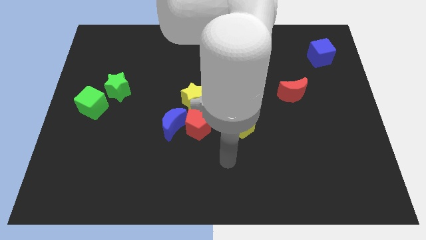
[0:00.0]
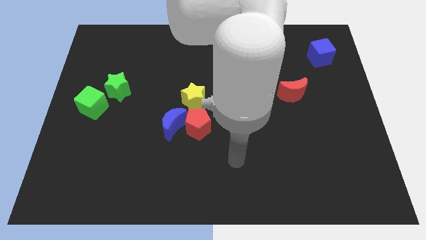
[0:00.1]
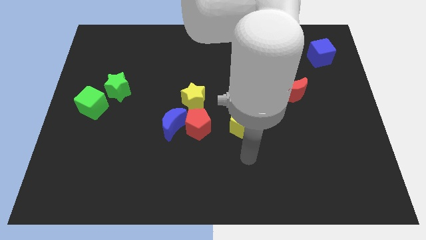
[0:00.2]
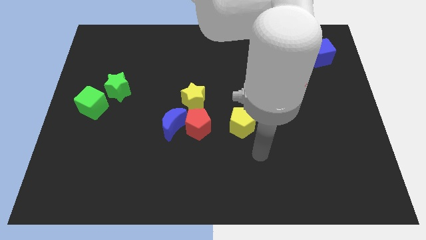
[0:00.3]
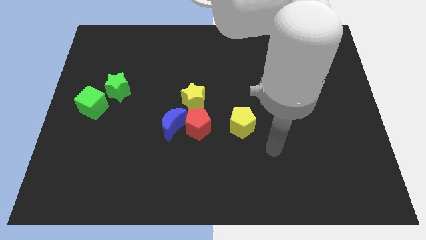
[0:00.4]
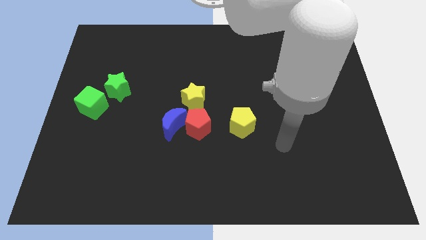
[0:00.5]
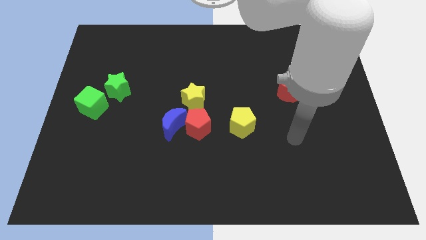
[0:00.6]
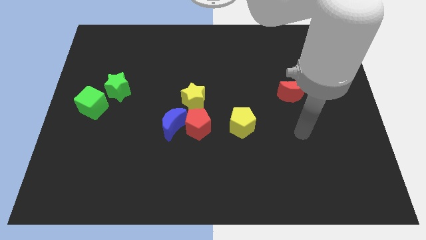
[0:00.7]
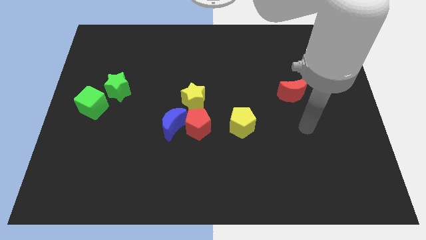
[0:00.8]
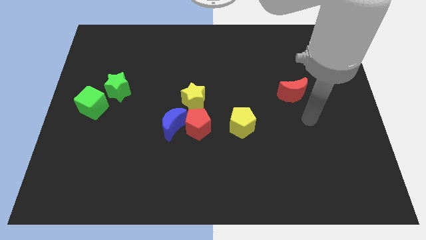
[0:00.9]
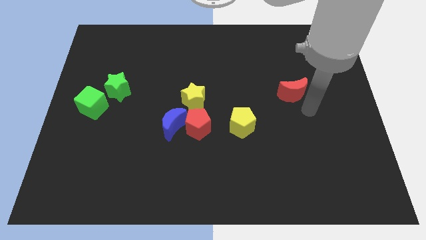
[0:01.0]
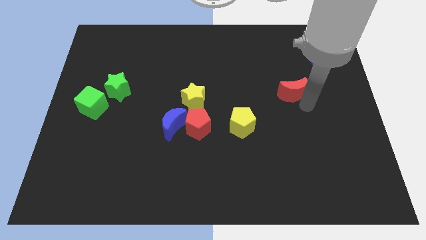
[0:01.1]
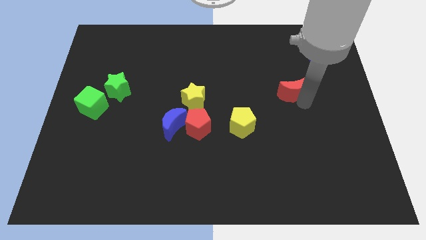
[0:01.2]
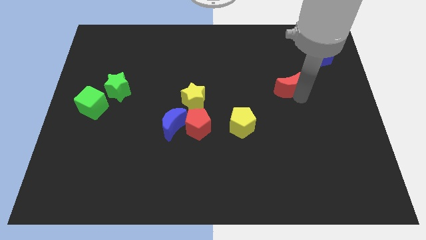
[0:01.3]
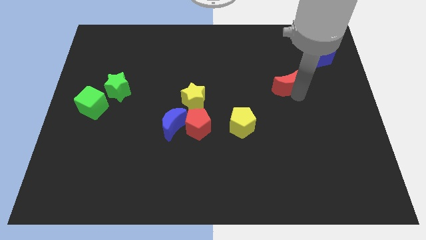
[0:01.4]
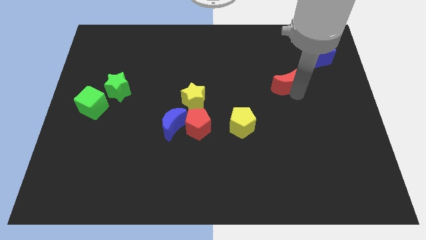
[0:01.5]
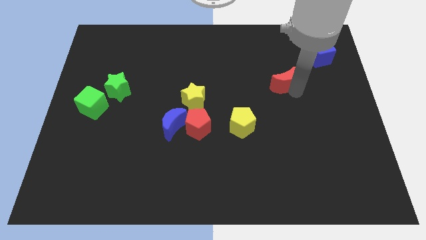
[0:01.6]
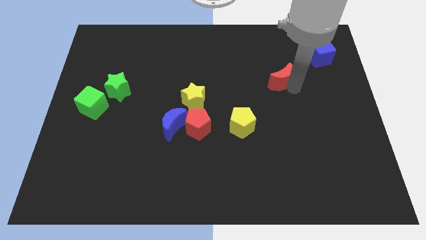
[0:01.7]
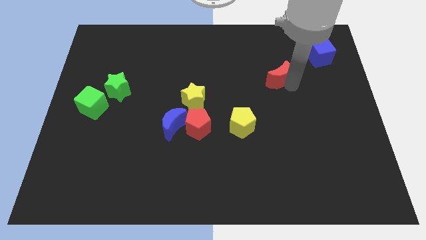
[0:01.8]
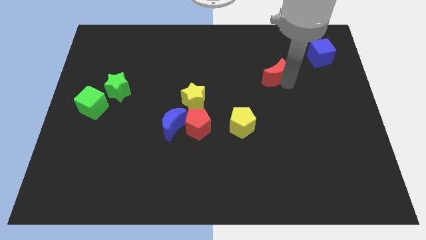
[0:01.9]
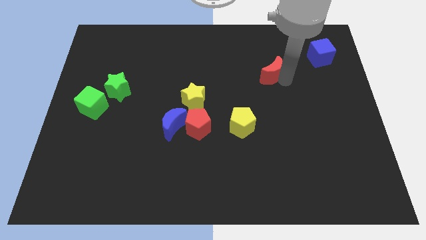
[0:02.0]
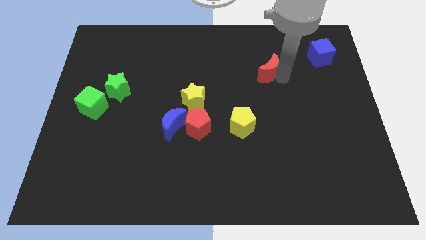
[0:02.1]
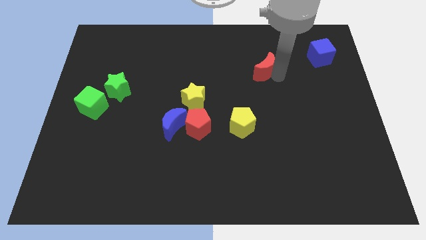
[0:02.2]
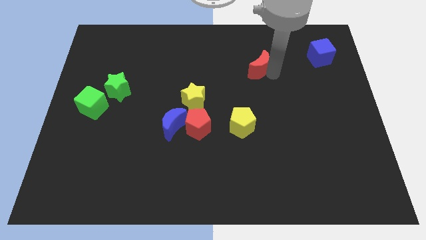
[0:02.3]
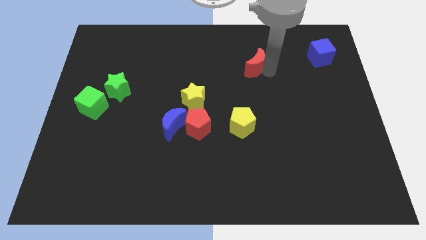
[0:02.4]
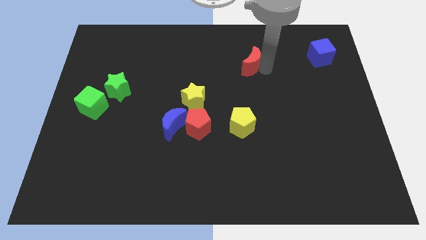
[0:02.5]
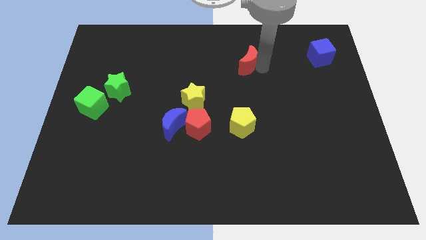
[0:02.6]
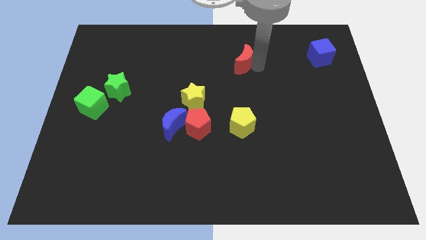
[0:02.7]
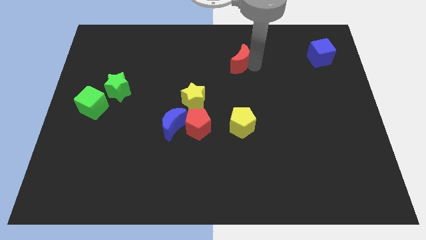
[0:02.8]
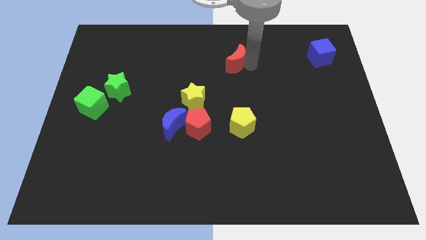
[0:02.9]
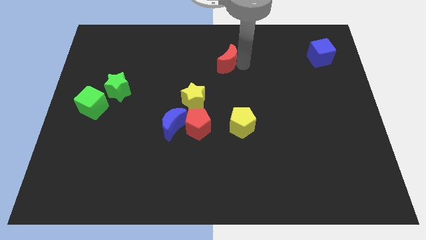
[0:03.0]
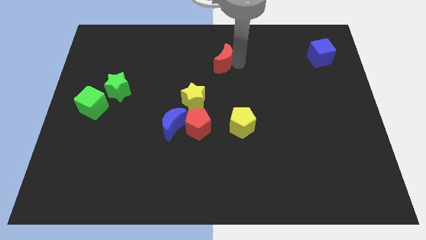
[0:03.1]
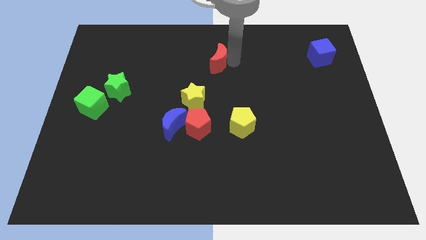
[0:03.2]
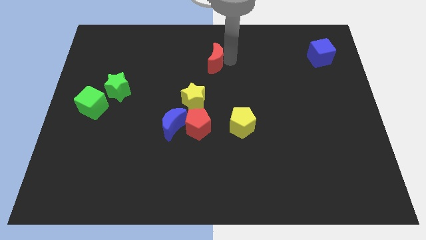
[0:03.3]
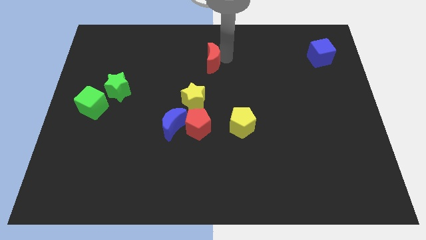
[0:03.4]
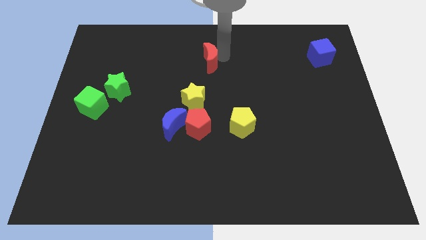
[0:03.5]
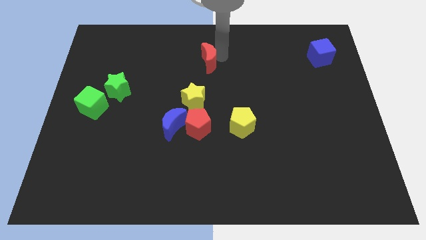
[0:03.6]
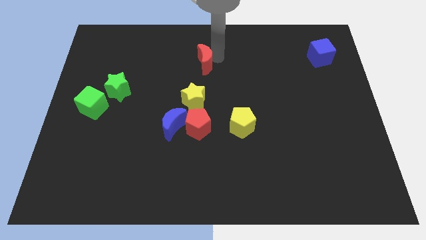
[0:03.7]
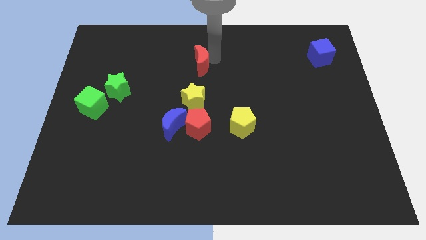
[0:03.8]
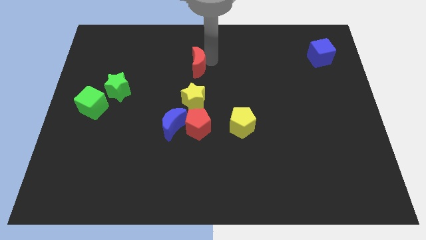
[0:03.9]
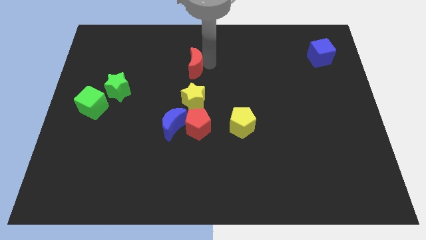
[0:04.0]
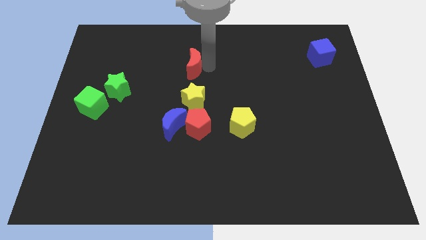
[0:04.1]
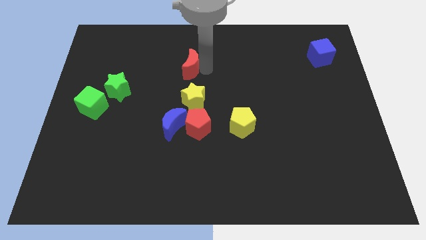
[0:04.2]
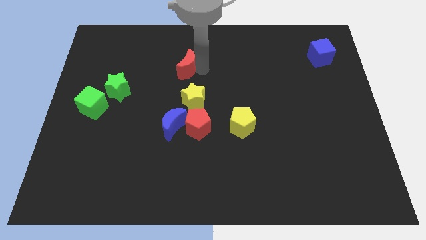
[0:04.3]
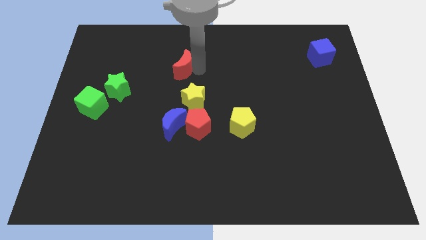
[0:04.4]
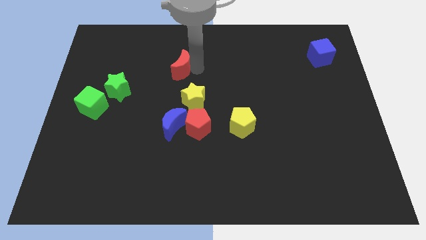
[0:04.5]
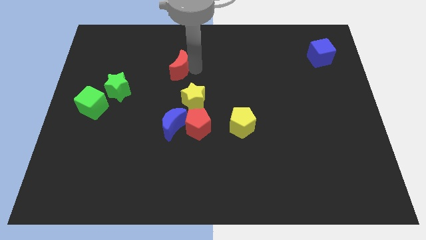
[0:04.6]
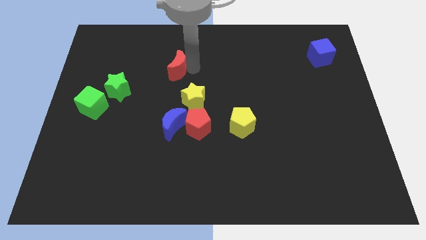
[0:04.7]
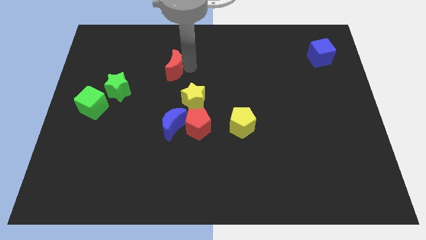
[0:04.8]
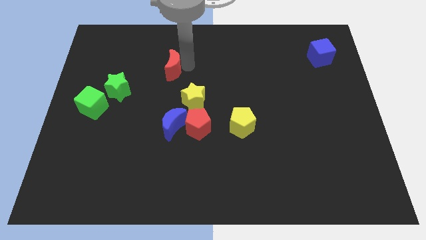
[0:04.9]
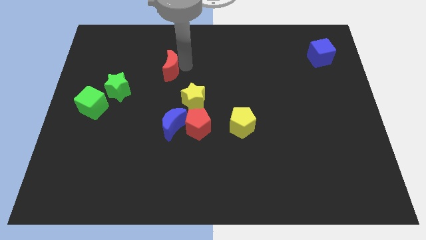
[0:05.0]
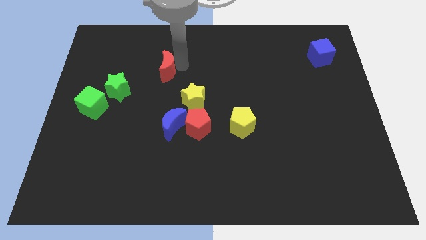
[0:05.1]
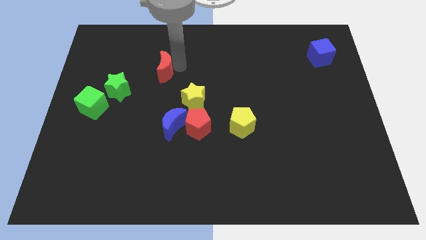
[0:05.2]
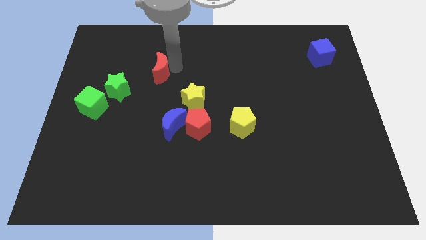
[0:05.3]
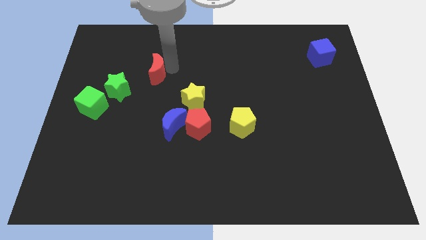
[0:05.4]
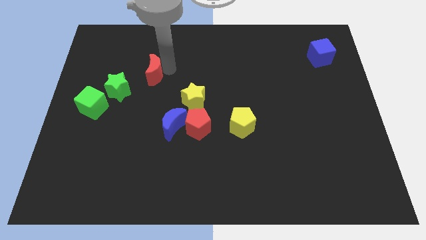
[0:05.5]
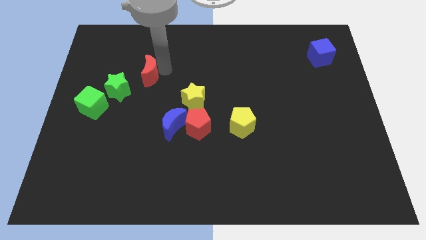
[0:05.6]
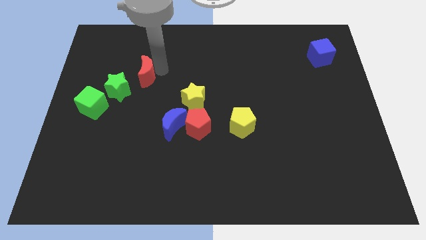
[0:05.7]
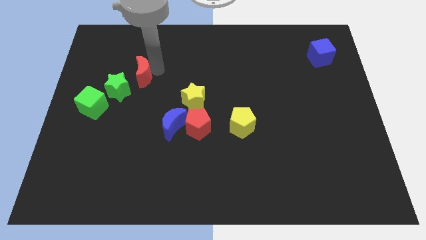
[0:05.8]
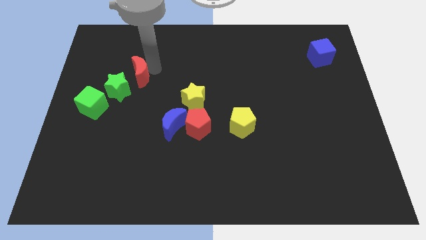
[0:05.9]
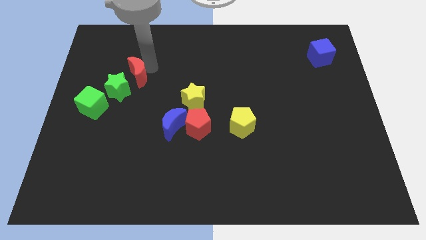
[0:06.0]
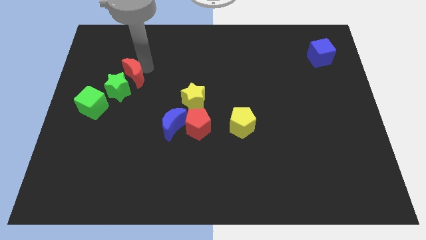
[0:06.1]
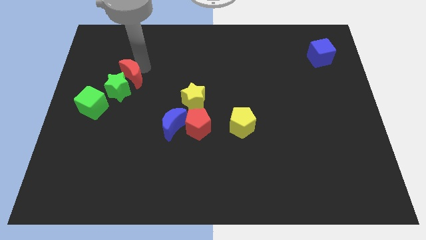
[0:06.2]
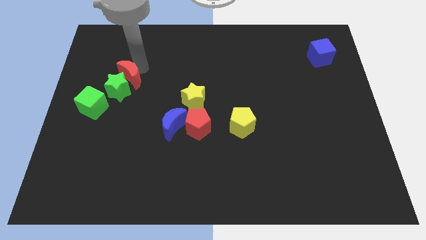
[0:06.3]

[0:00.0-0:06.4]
slide the red moon next to the green star

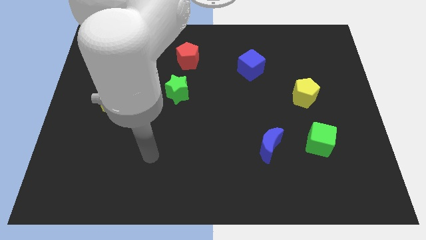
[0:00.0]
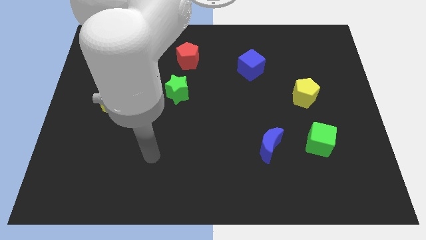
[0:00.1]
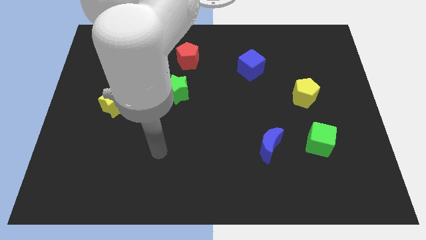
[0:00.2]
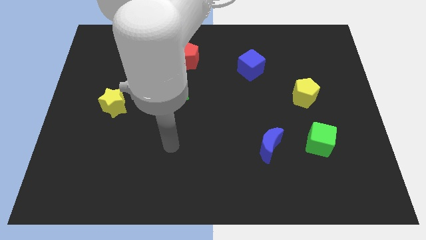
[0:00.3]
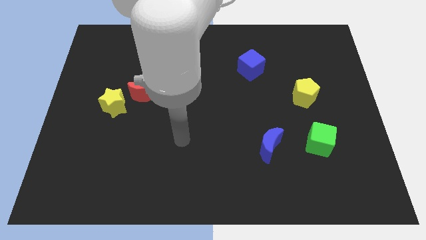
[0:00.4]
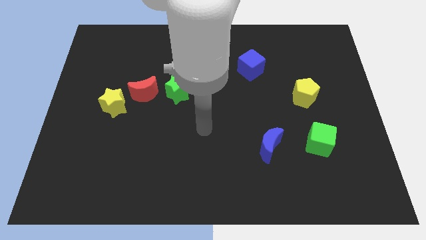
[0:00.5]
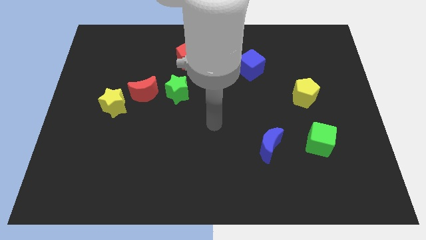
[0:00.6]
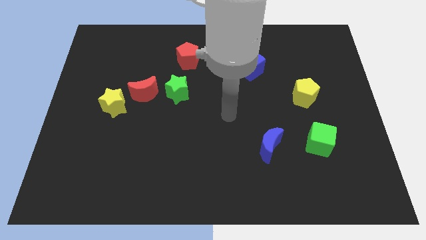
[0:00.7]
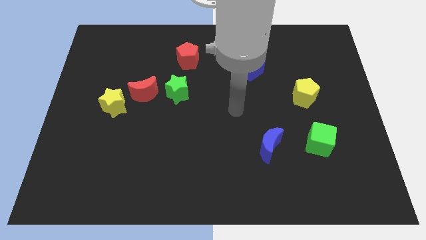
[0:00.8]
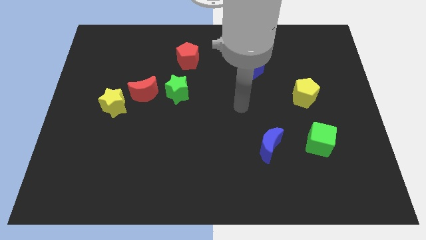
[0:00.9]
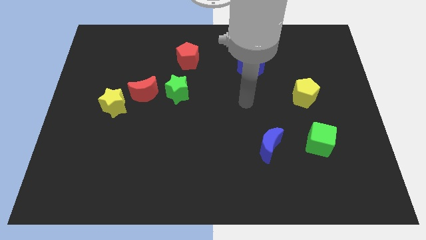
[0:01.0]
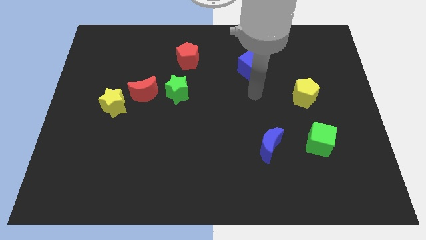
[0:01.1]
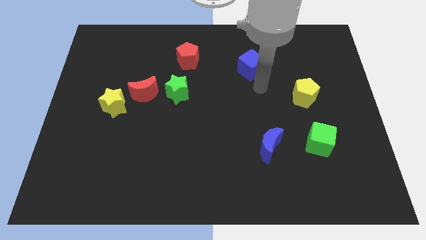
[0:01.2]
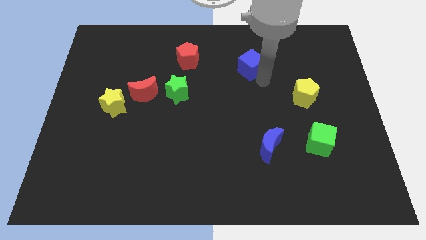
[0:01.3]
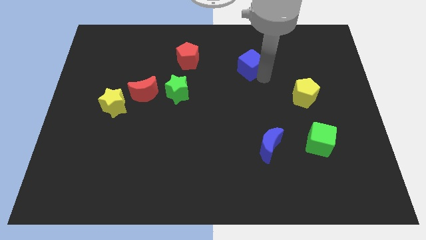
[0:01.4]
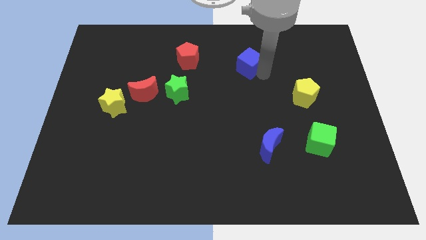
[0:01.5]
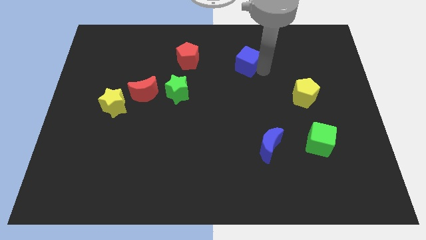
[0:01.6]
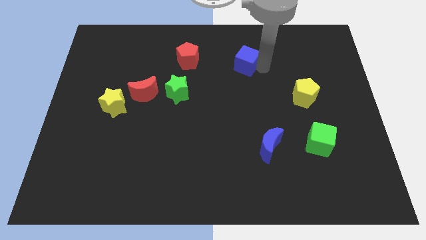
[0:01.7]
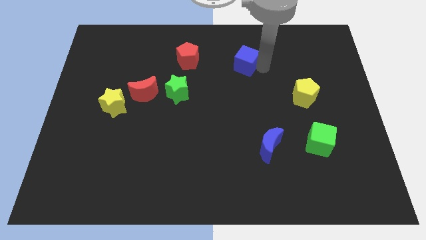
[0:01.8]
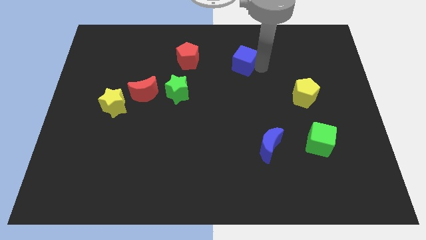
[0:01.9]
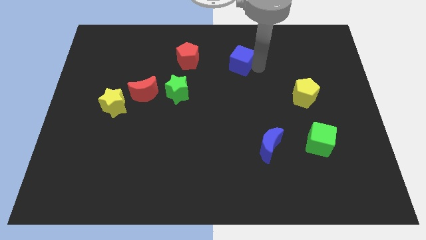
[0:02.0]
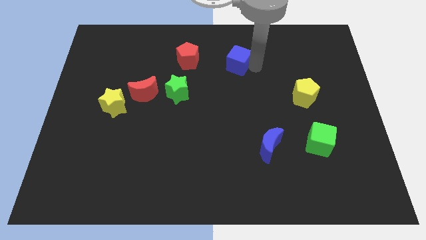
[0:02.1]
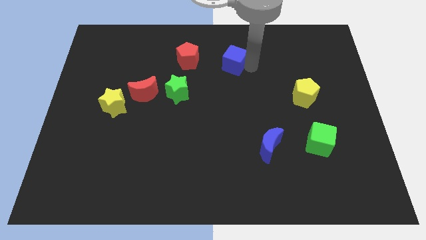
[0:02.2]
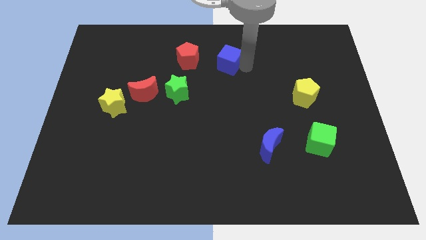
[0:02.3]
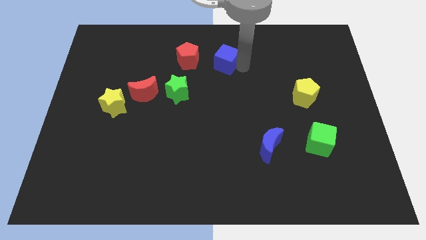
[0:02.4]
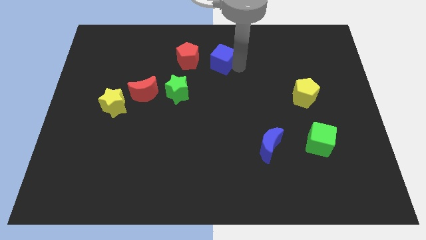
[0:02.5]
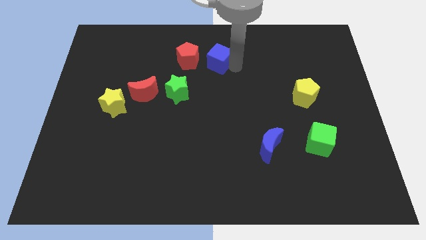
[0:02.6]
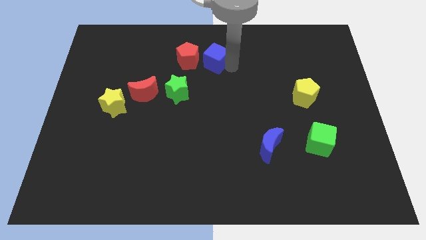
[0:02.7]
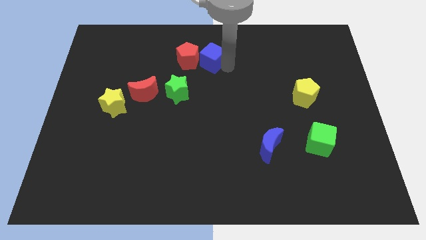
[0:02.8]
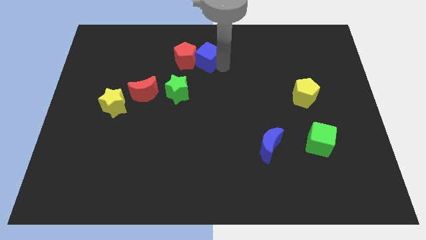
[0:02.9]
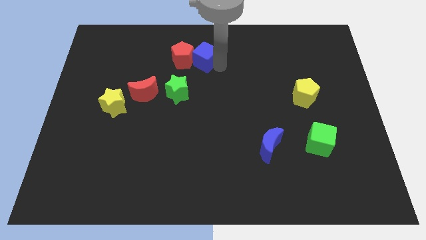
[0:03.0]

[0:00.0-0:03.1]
put the blue cube close to the red pentagon
